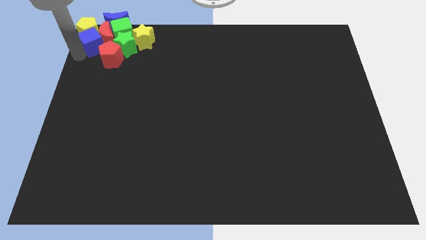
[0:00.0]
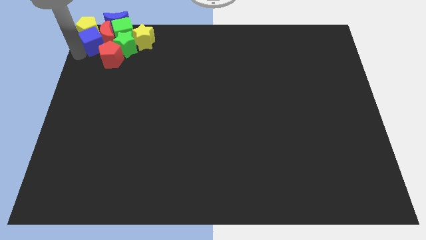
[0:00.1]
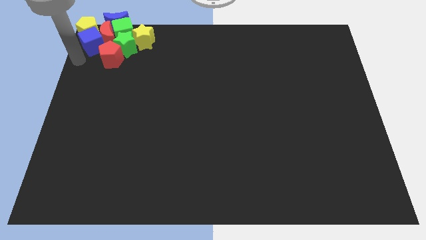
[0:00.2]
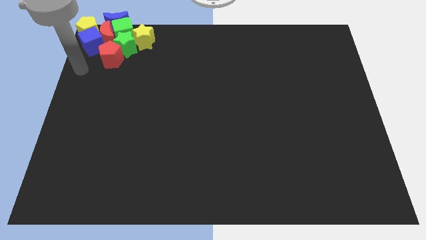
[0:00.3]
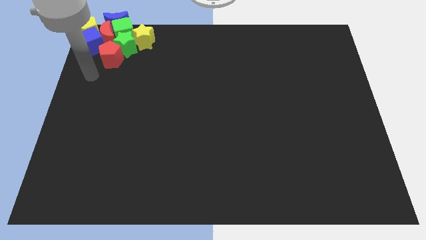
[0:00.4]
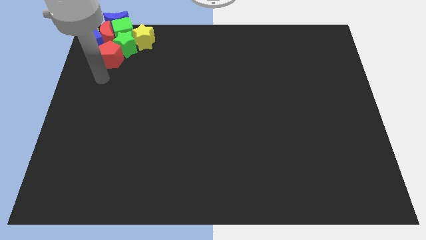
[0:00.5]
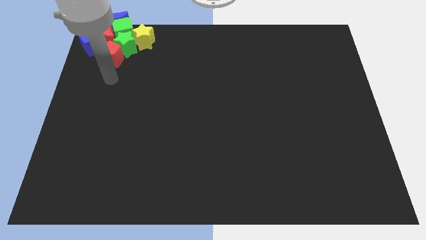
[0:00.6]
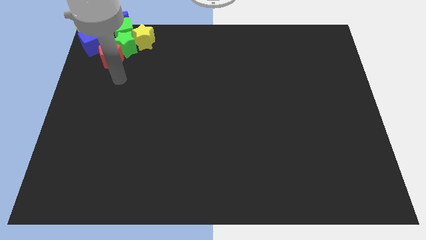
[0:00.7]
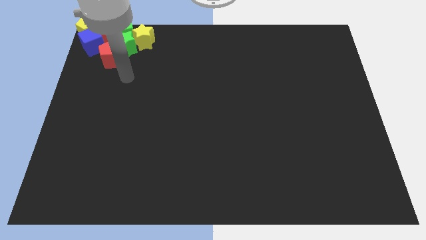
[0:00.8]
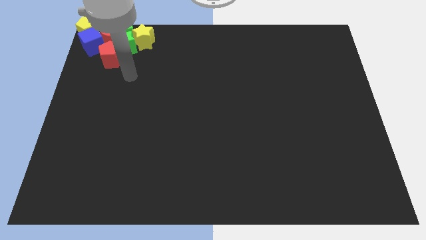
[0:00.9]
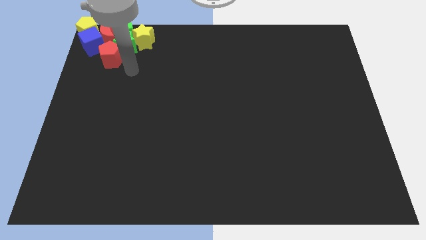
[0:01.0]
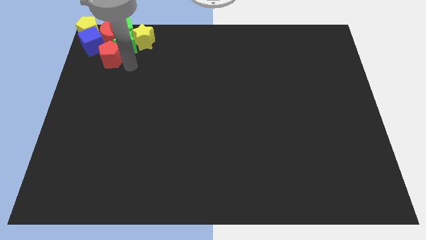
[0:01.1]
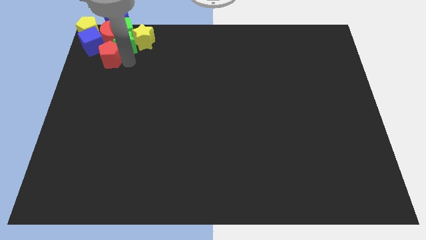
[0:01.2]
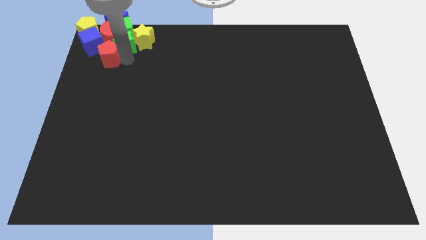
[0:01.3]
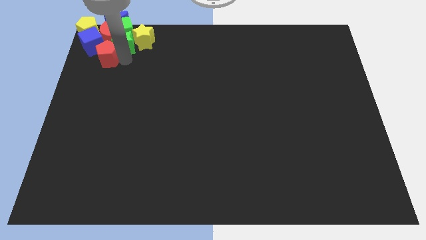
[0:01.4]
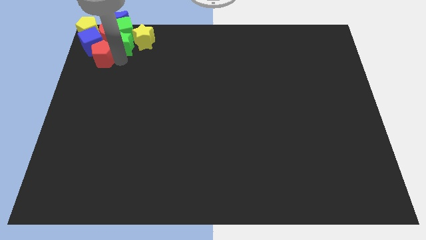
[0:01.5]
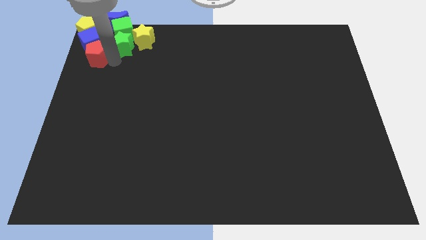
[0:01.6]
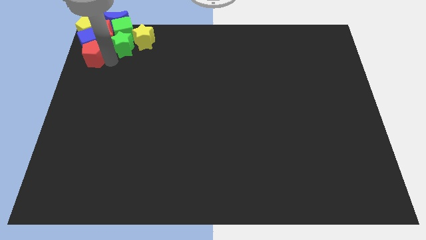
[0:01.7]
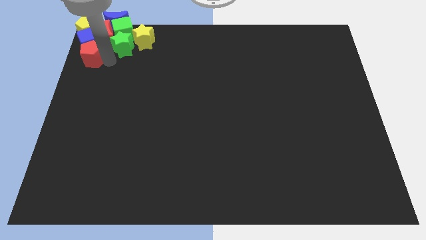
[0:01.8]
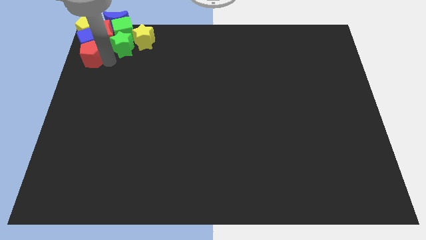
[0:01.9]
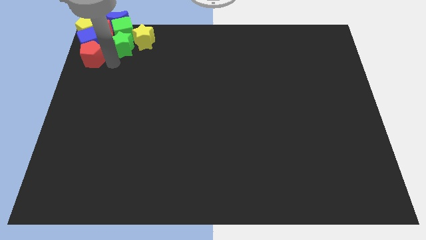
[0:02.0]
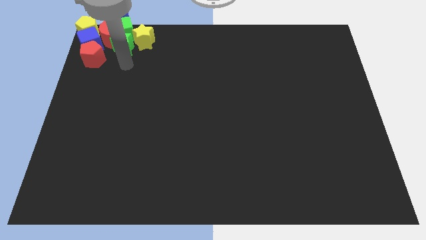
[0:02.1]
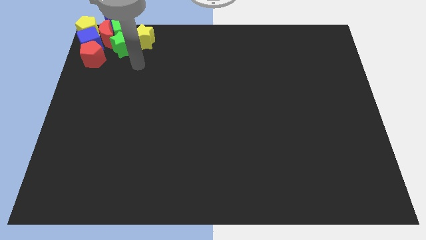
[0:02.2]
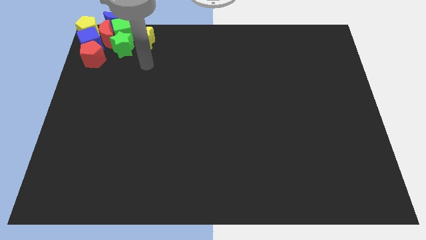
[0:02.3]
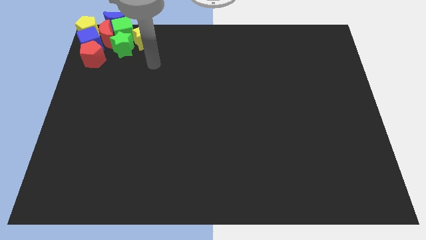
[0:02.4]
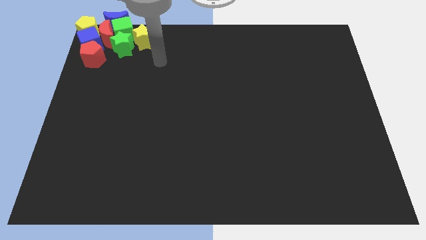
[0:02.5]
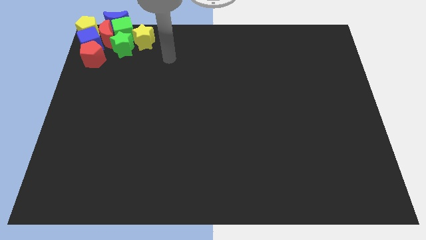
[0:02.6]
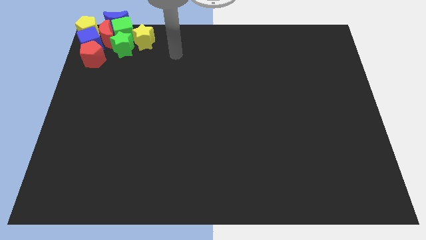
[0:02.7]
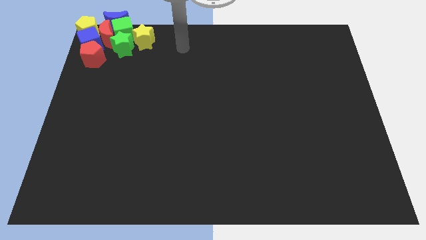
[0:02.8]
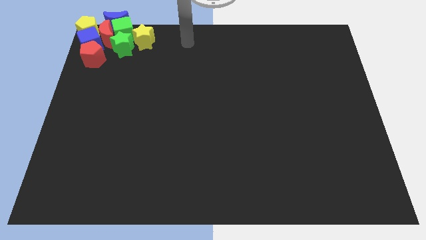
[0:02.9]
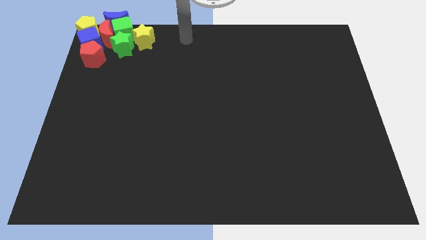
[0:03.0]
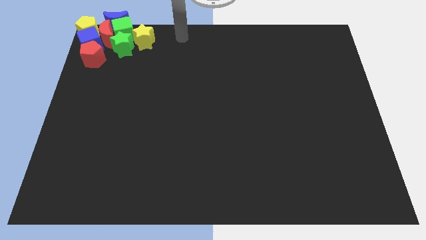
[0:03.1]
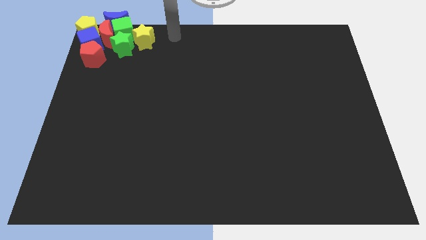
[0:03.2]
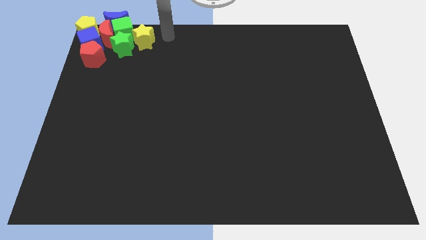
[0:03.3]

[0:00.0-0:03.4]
place the red pentagon underneath the blue cube

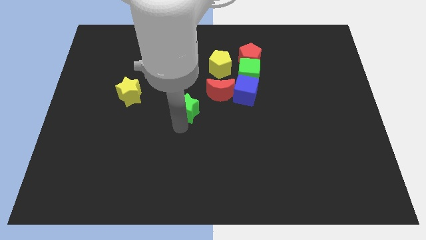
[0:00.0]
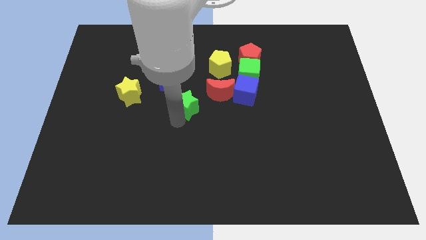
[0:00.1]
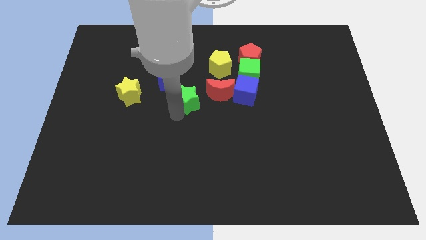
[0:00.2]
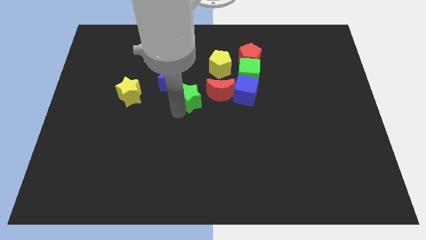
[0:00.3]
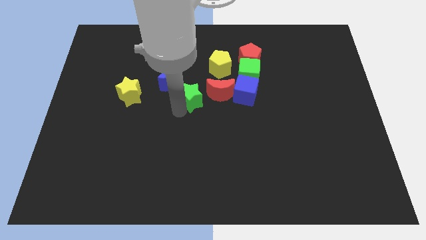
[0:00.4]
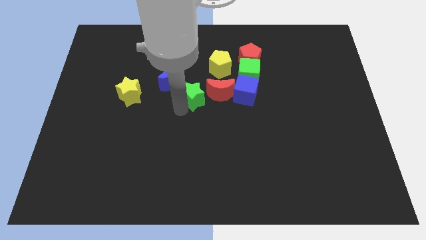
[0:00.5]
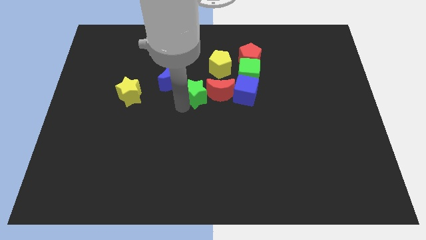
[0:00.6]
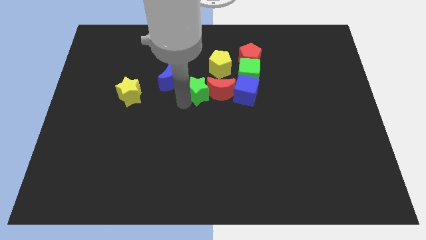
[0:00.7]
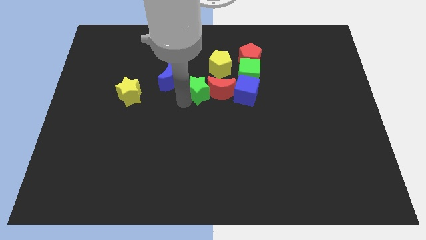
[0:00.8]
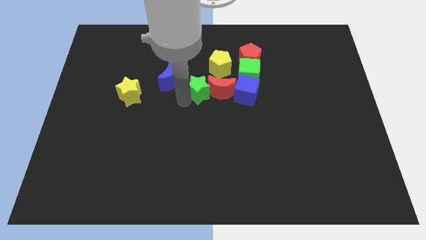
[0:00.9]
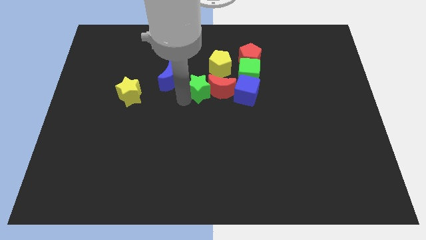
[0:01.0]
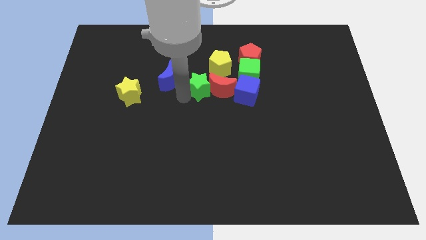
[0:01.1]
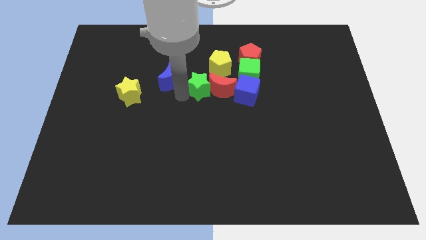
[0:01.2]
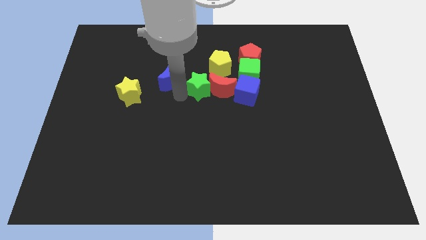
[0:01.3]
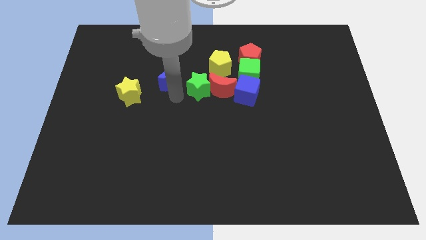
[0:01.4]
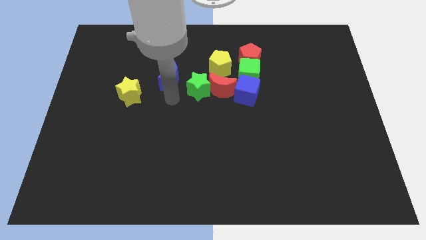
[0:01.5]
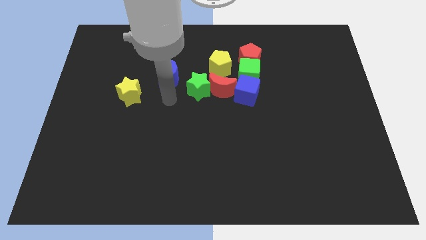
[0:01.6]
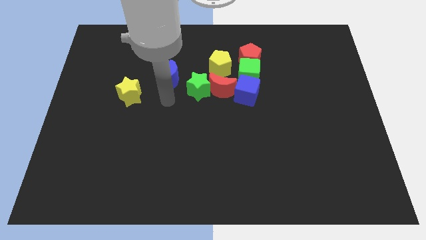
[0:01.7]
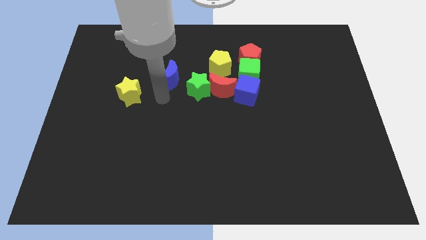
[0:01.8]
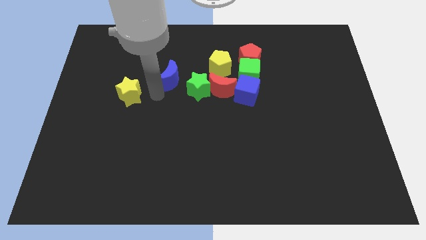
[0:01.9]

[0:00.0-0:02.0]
move the green star to the left of the red moon

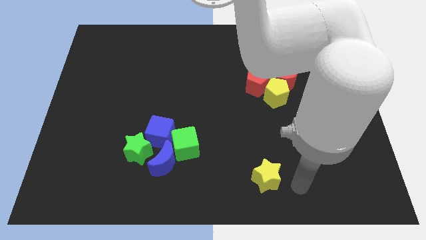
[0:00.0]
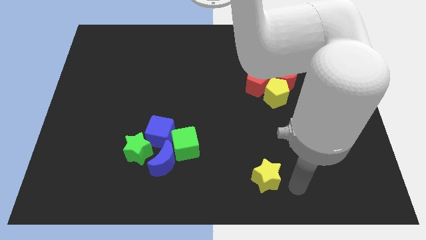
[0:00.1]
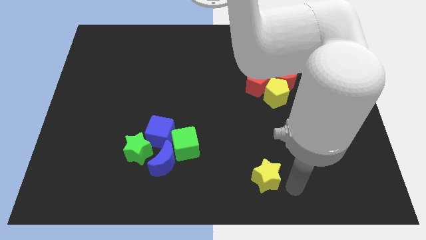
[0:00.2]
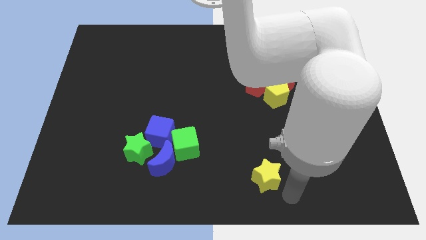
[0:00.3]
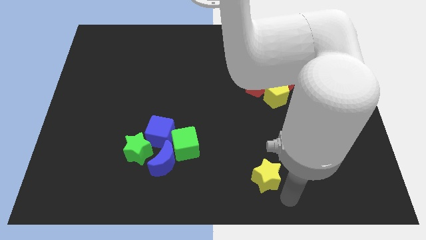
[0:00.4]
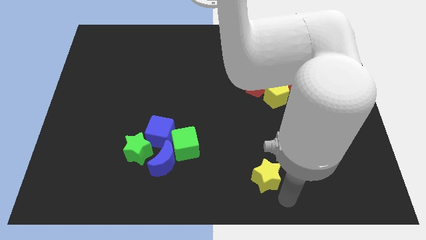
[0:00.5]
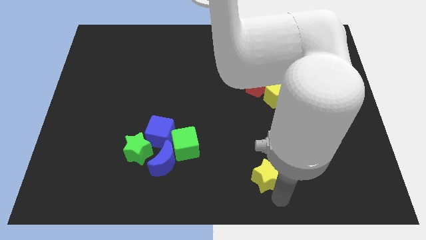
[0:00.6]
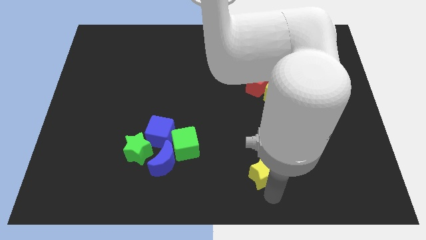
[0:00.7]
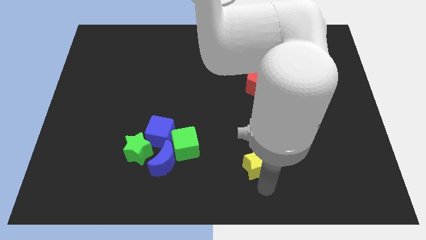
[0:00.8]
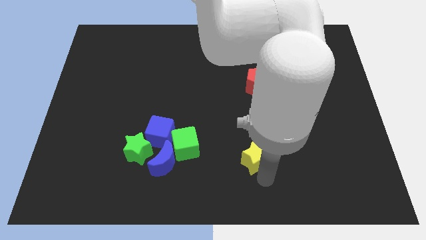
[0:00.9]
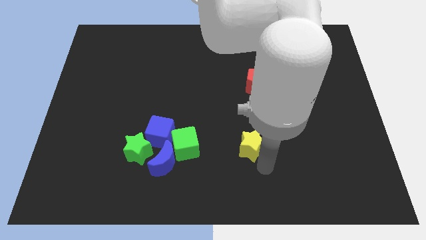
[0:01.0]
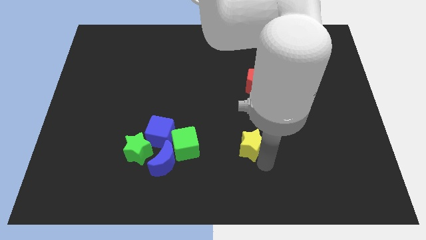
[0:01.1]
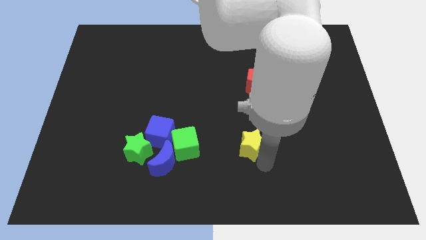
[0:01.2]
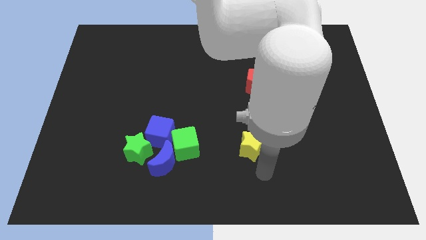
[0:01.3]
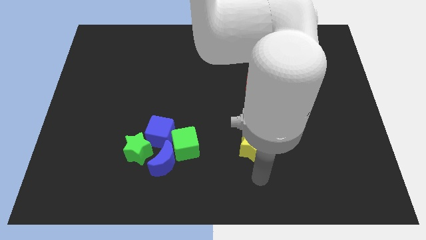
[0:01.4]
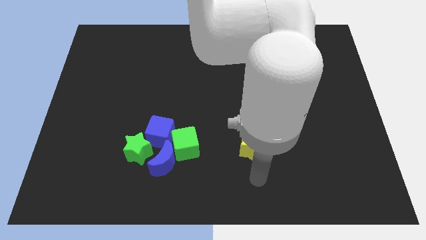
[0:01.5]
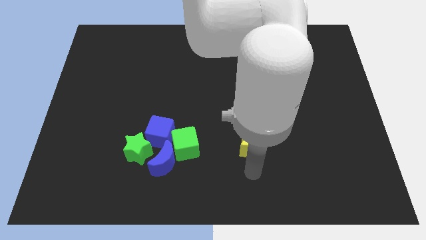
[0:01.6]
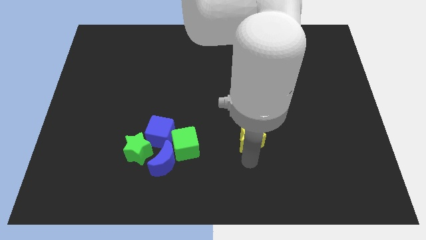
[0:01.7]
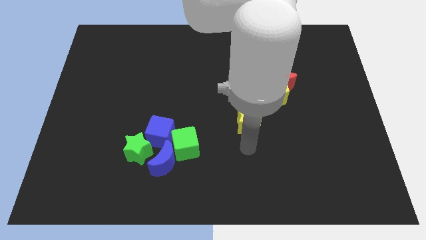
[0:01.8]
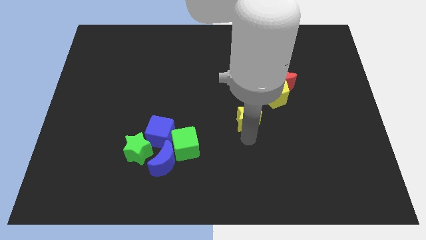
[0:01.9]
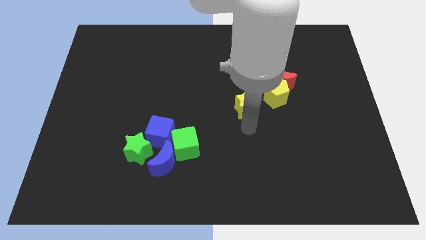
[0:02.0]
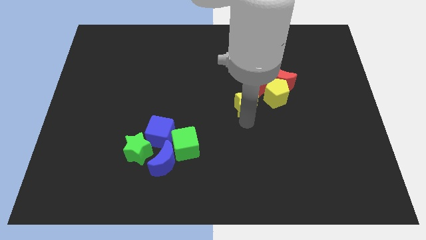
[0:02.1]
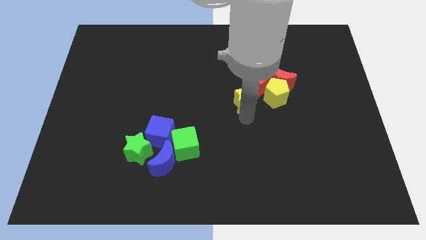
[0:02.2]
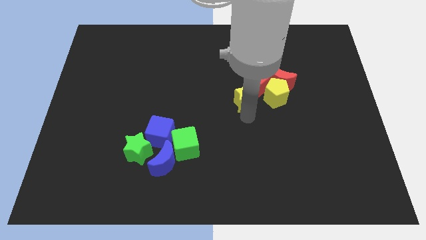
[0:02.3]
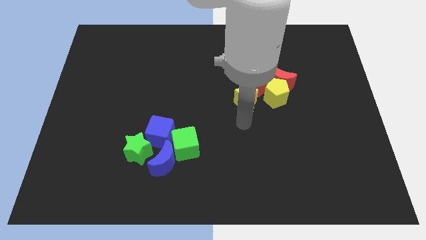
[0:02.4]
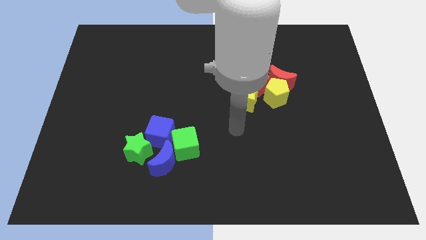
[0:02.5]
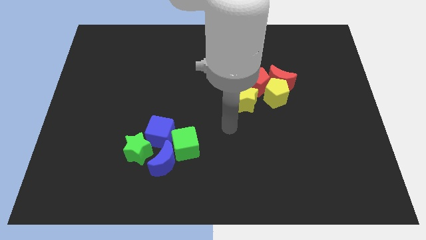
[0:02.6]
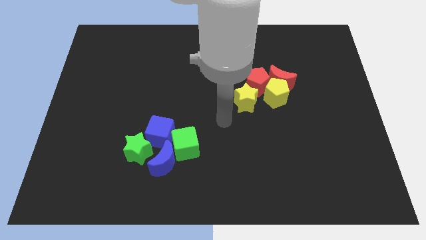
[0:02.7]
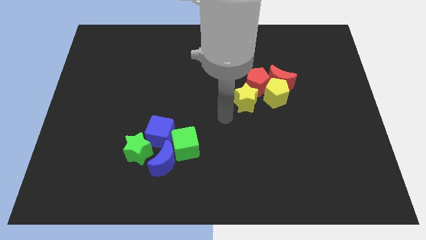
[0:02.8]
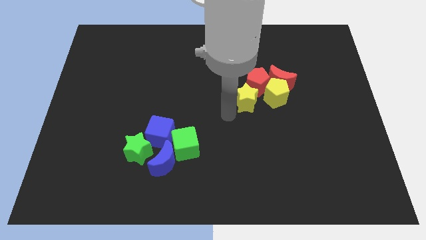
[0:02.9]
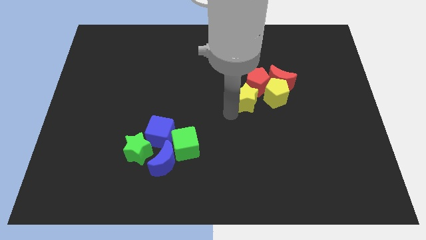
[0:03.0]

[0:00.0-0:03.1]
move the yellow star left to the yellow pentagon

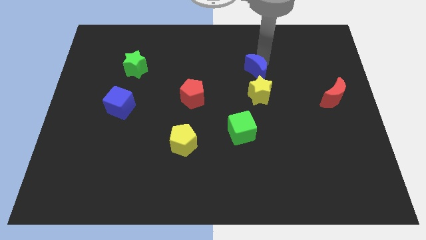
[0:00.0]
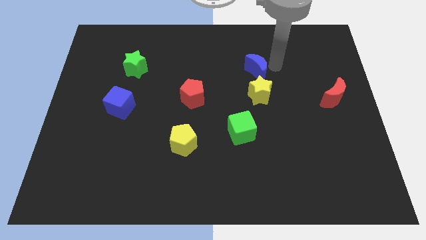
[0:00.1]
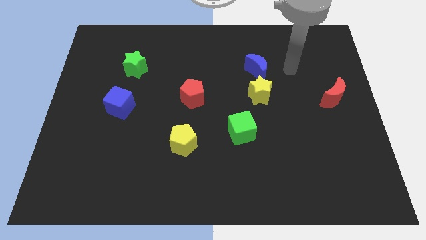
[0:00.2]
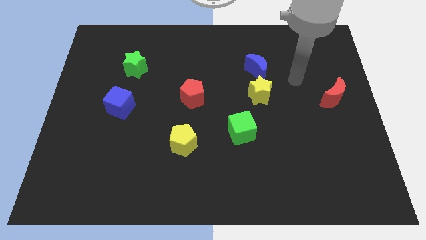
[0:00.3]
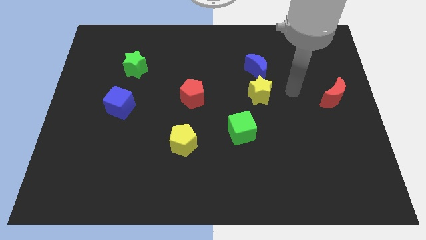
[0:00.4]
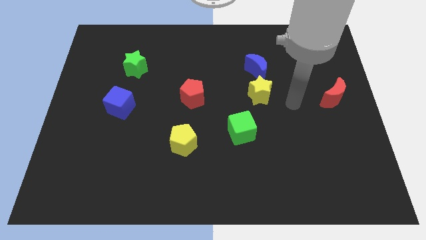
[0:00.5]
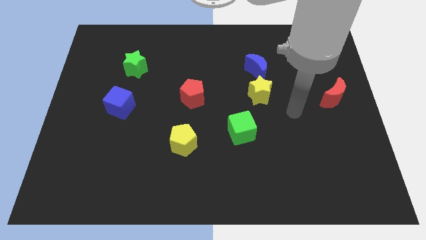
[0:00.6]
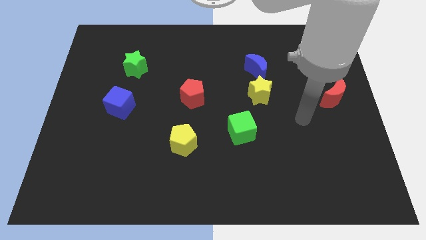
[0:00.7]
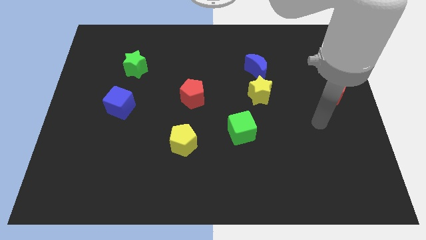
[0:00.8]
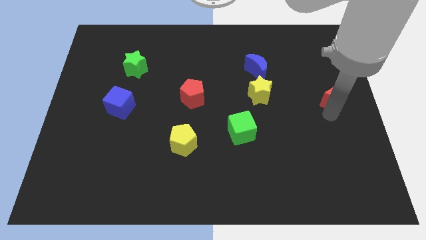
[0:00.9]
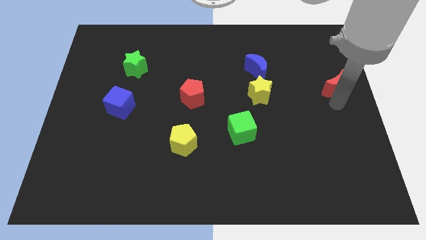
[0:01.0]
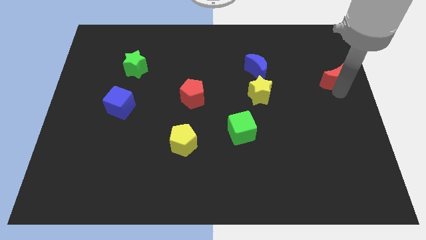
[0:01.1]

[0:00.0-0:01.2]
tap the bottom side of red moon
